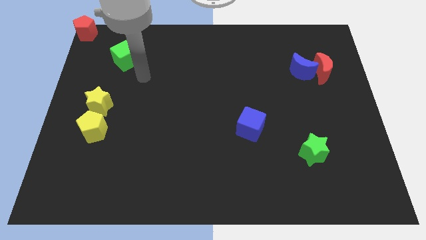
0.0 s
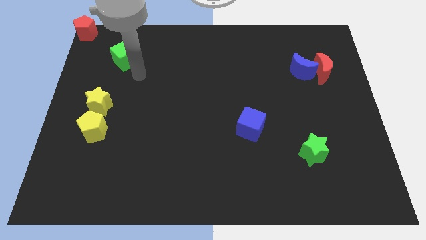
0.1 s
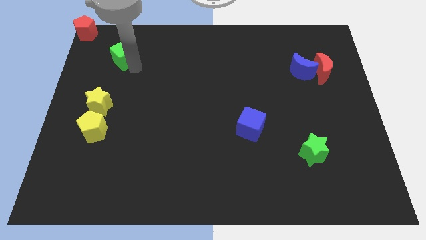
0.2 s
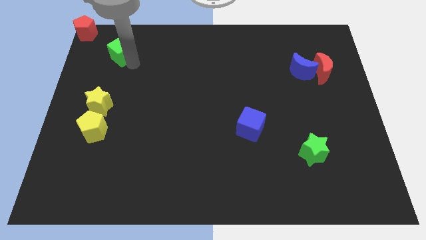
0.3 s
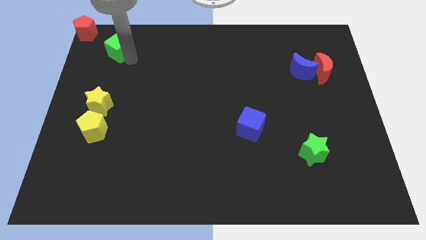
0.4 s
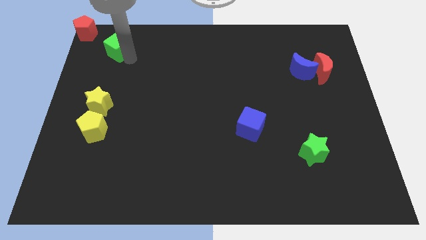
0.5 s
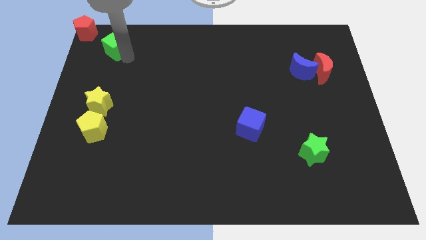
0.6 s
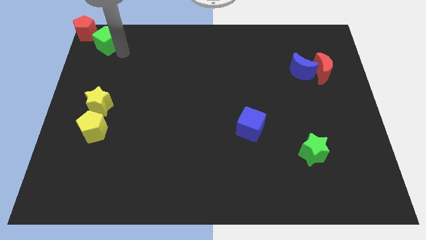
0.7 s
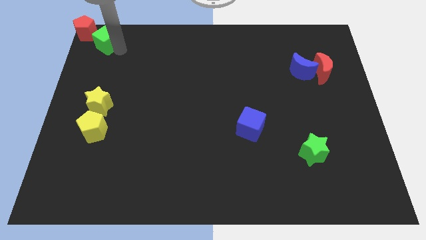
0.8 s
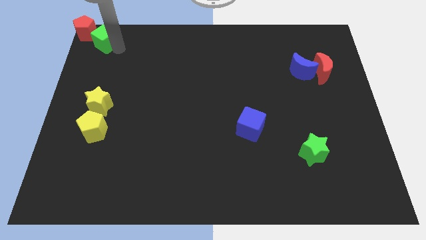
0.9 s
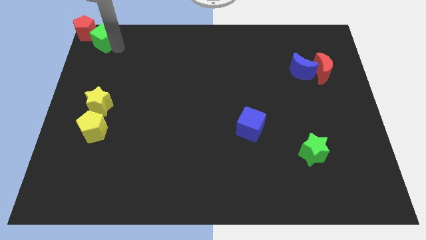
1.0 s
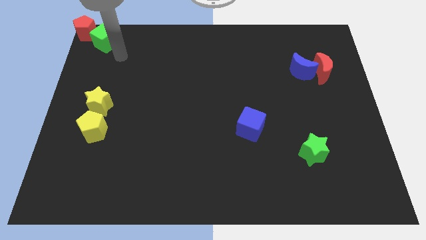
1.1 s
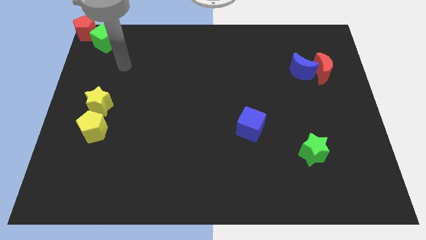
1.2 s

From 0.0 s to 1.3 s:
move the green cube to the top left on the board

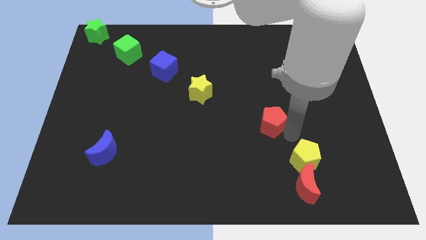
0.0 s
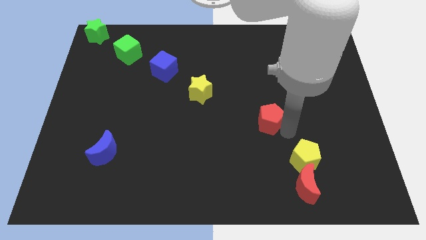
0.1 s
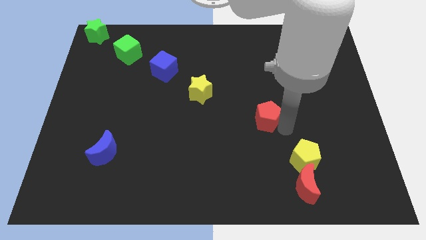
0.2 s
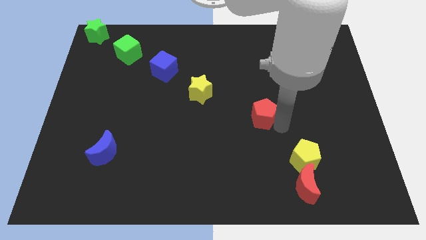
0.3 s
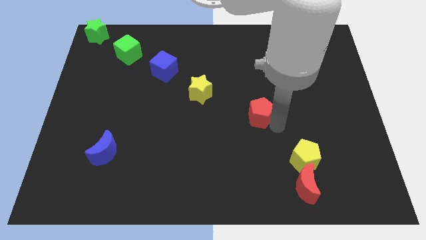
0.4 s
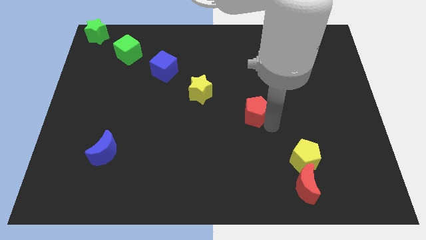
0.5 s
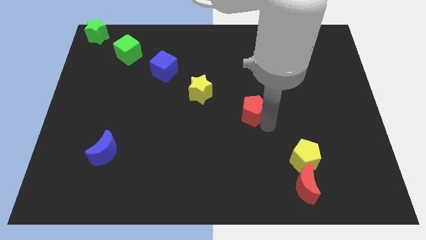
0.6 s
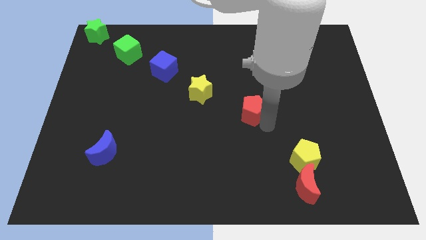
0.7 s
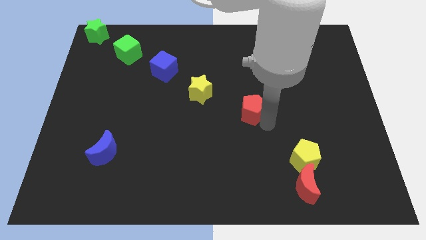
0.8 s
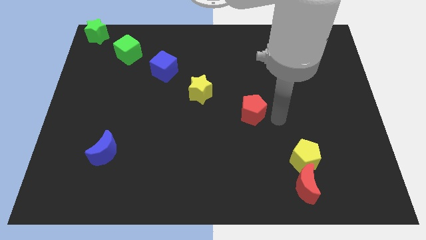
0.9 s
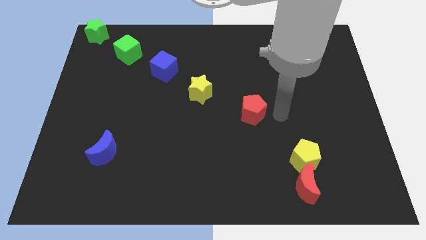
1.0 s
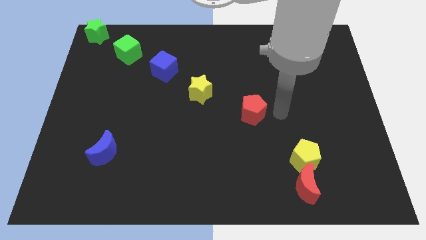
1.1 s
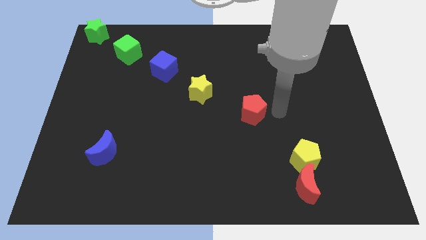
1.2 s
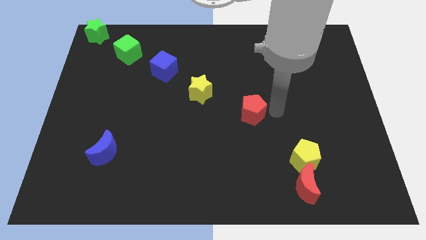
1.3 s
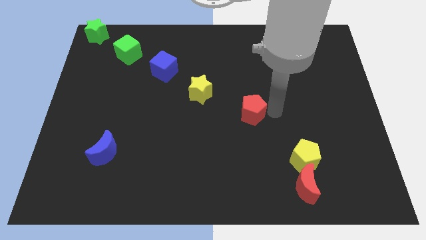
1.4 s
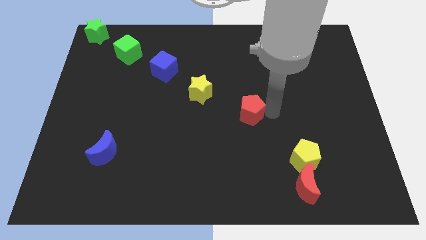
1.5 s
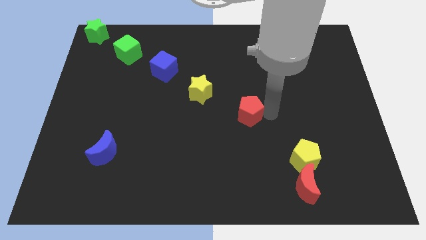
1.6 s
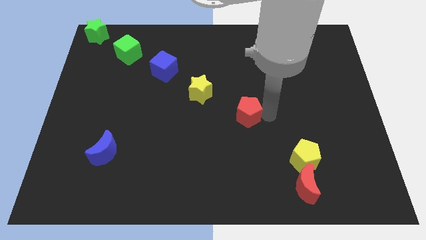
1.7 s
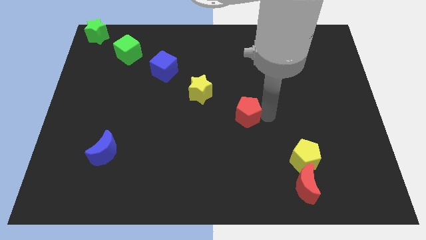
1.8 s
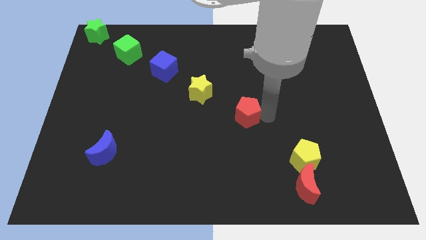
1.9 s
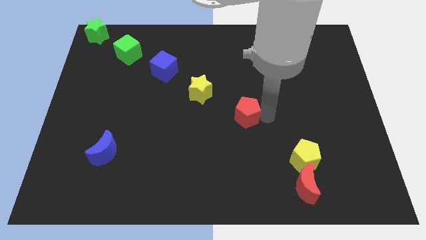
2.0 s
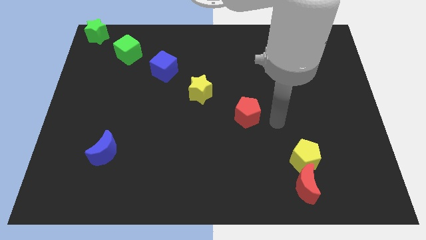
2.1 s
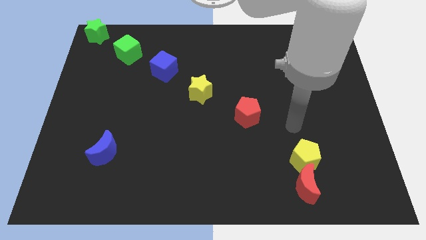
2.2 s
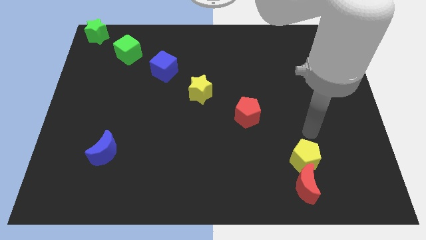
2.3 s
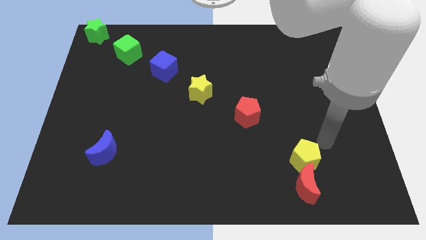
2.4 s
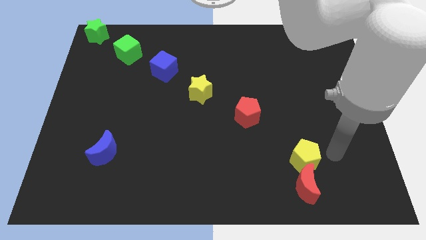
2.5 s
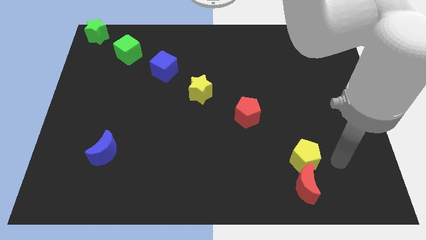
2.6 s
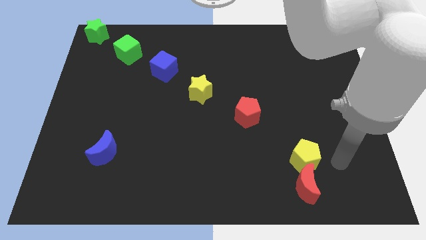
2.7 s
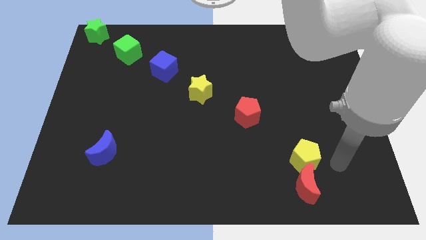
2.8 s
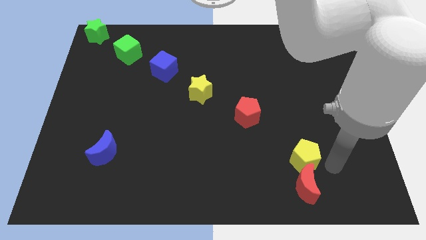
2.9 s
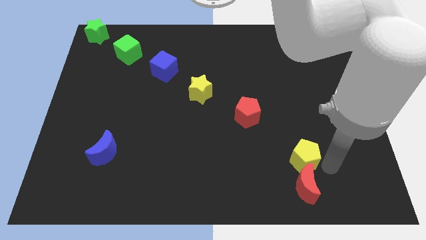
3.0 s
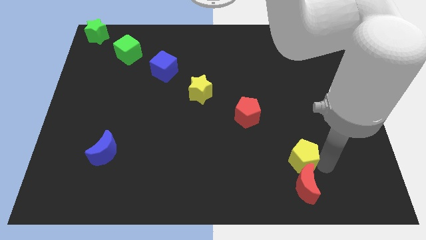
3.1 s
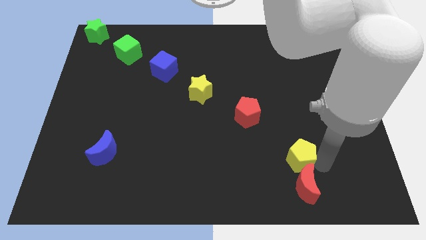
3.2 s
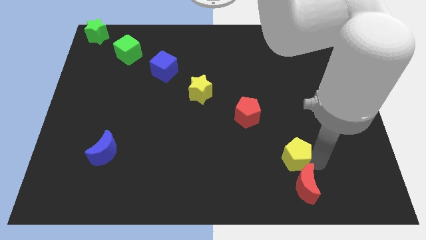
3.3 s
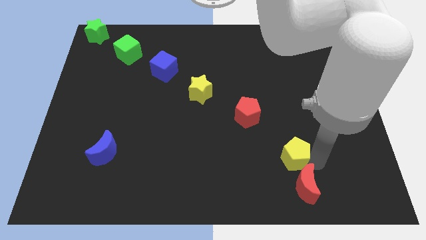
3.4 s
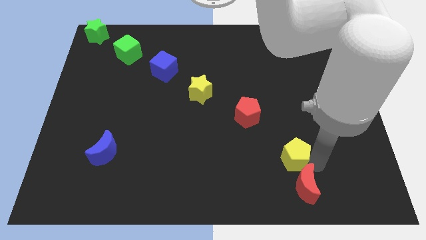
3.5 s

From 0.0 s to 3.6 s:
move the red pentagon diagonally left of the yellow pentagon

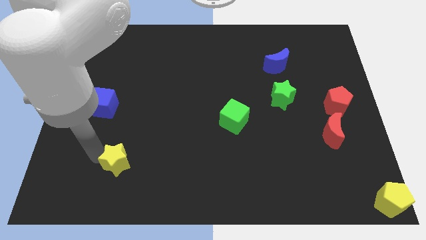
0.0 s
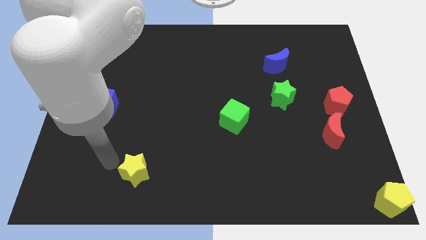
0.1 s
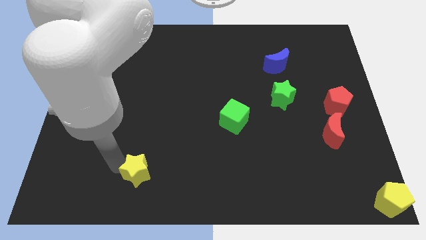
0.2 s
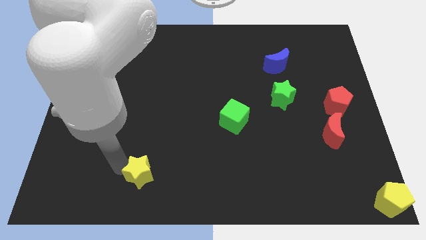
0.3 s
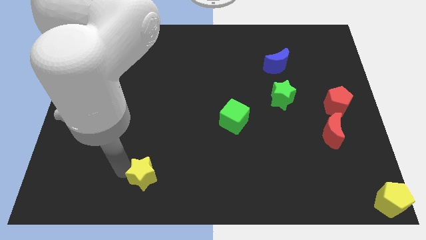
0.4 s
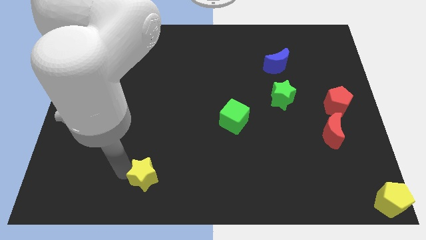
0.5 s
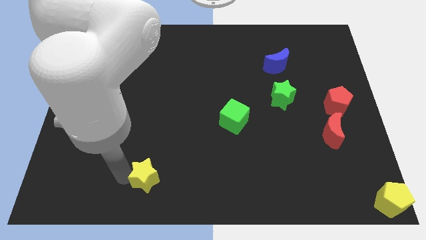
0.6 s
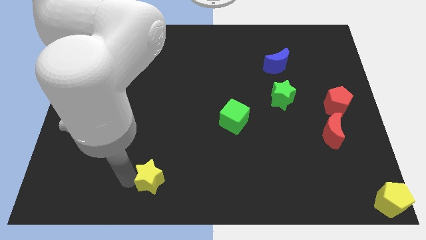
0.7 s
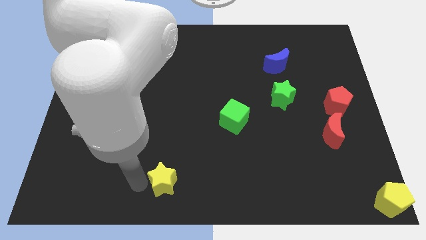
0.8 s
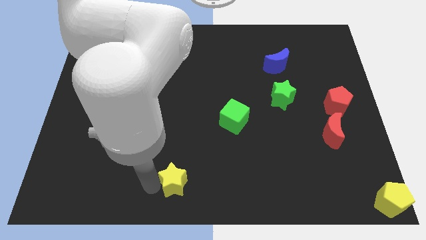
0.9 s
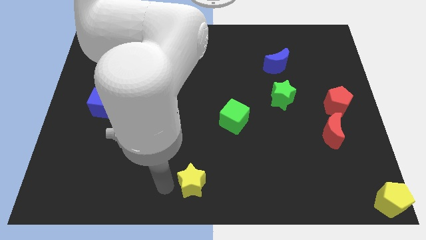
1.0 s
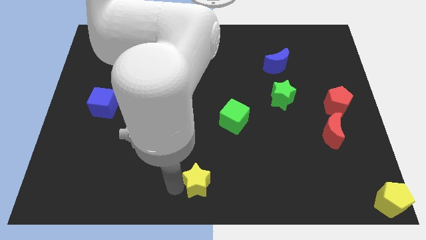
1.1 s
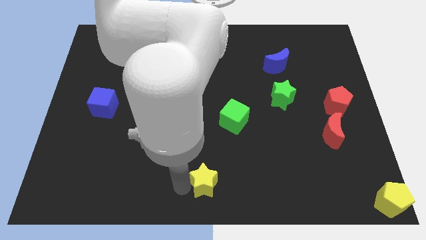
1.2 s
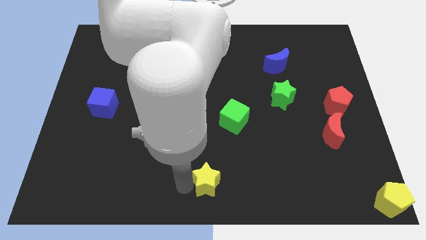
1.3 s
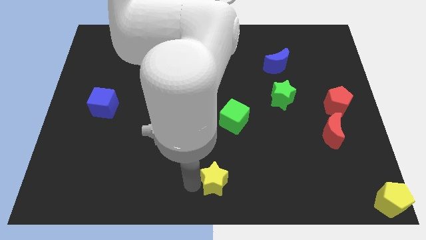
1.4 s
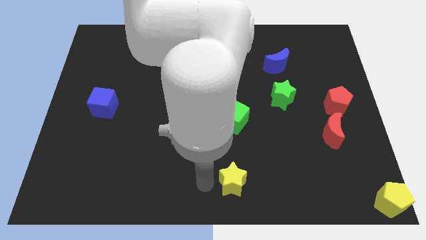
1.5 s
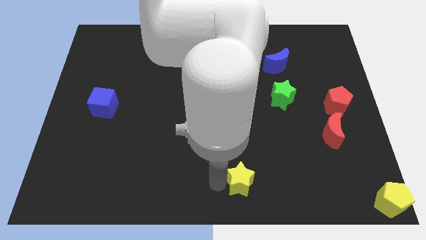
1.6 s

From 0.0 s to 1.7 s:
push the yellow star to the bottom of the green cube

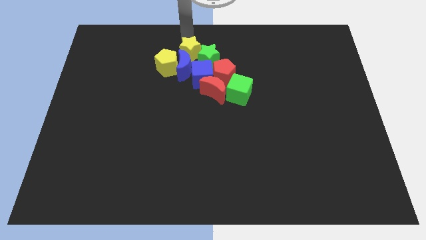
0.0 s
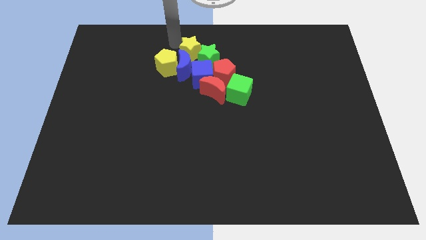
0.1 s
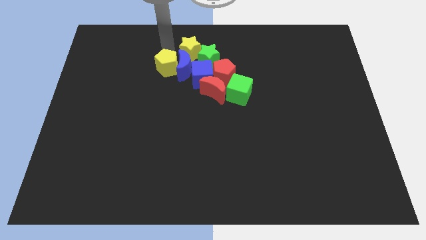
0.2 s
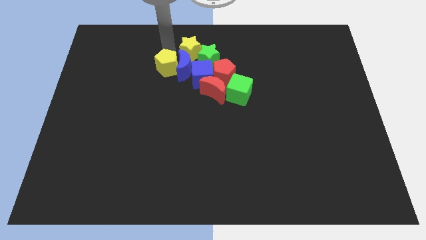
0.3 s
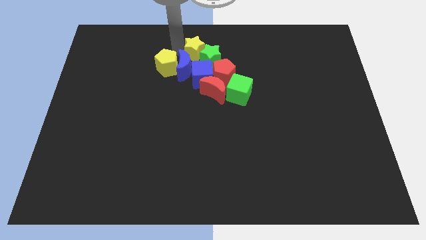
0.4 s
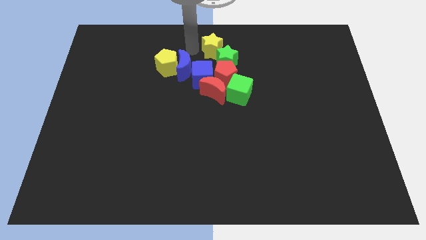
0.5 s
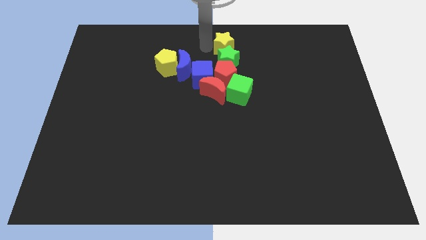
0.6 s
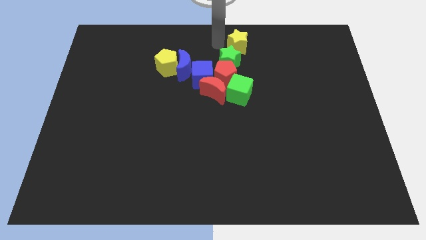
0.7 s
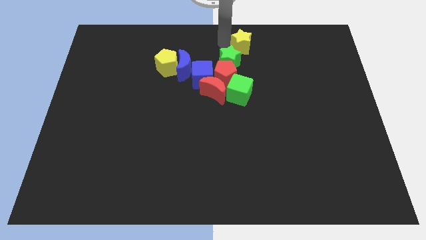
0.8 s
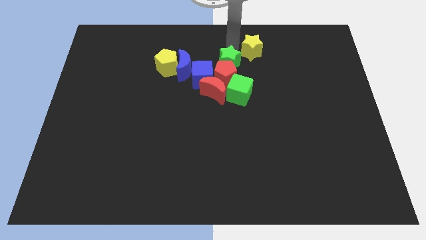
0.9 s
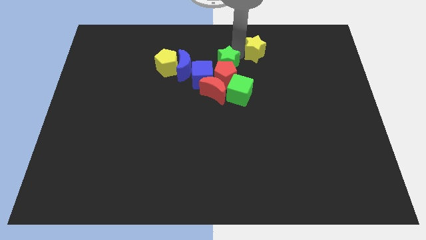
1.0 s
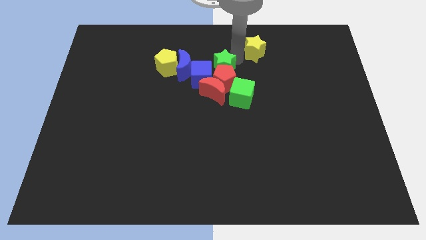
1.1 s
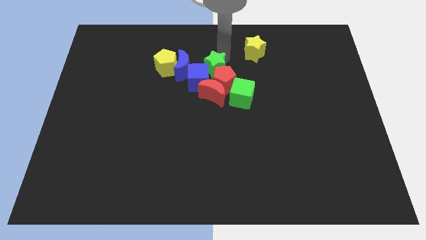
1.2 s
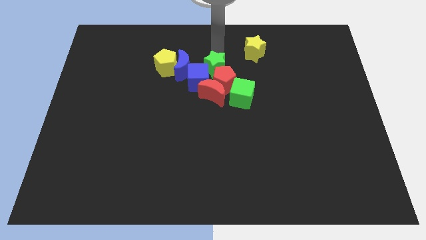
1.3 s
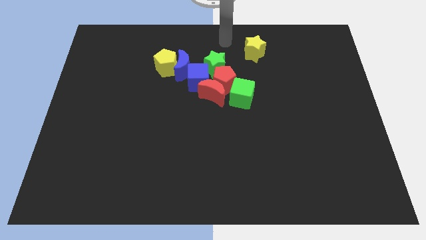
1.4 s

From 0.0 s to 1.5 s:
separate the yellow star from the green star

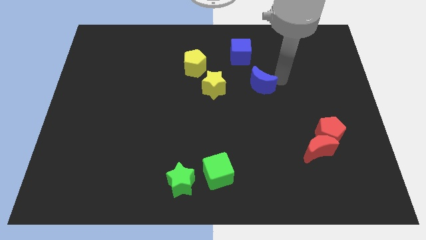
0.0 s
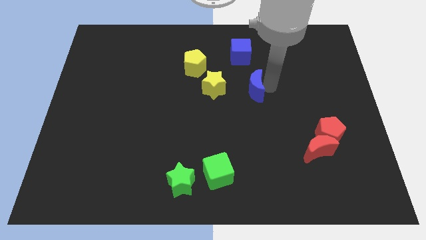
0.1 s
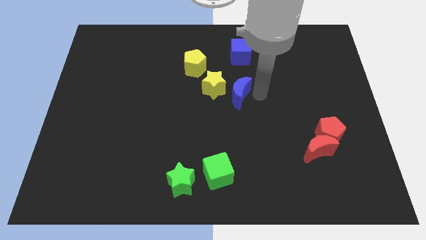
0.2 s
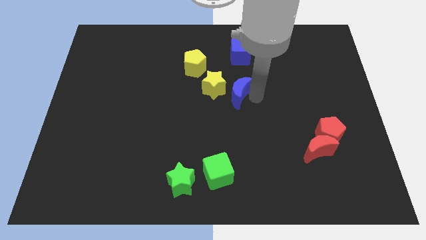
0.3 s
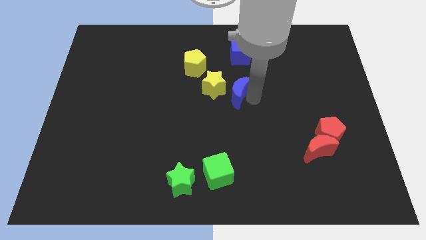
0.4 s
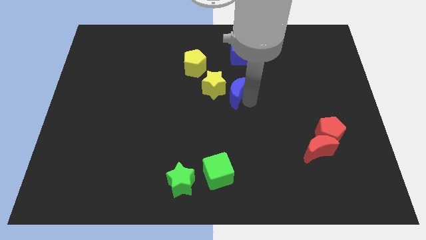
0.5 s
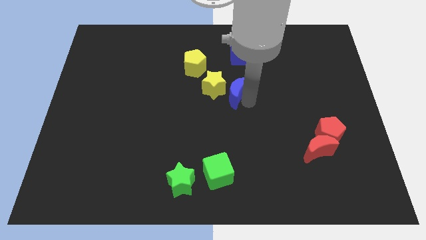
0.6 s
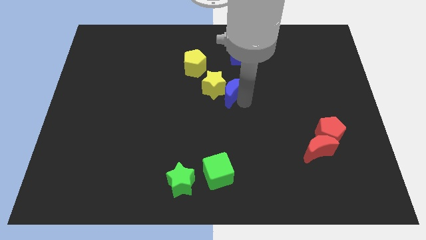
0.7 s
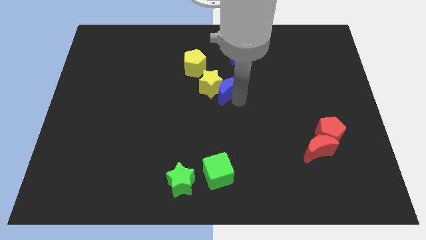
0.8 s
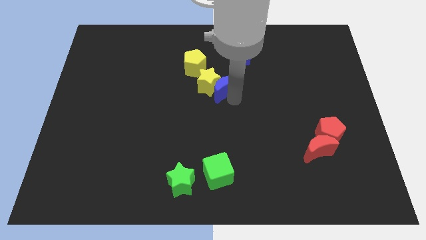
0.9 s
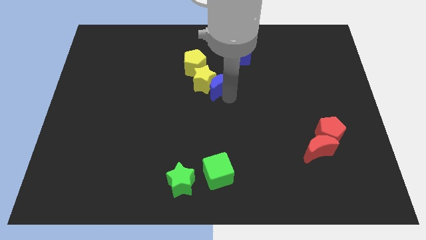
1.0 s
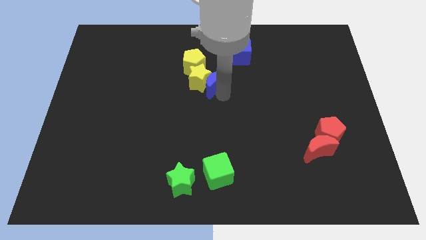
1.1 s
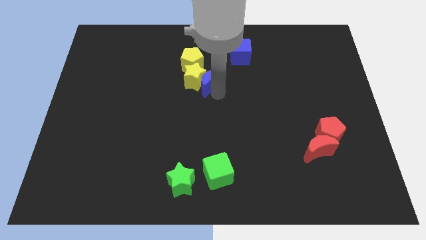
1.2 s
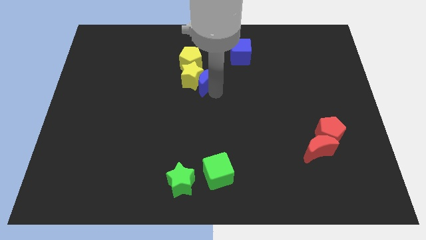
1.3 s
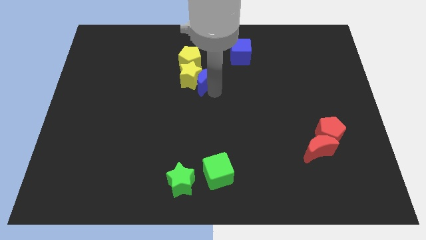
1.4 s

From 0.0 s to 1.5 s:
push the yellow star with the blue moon
